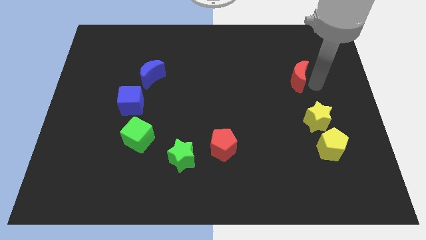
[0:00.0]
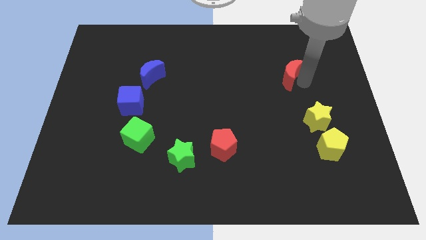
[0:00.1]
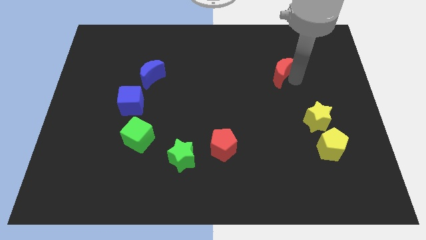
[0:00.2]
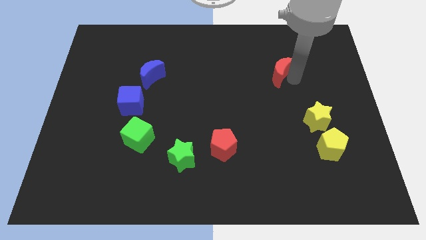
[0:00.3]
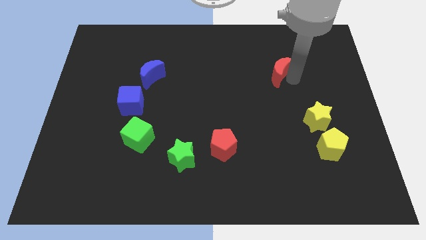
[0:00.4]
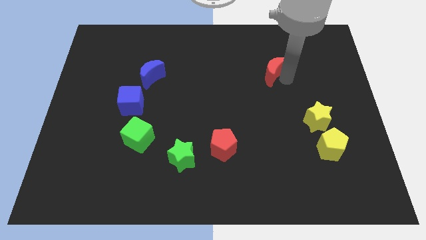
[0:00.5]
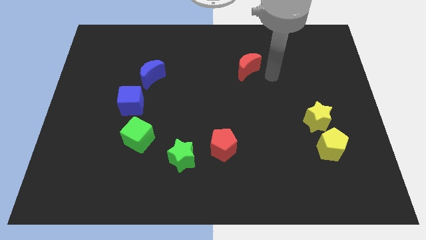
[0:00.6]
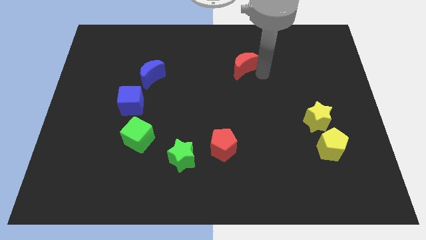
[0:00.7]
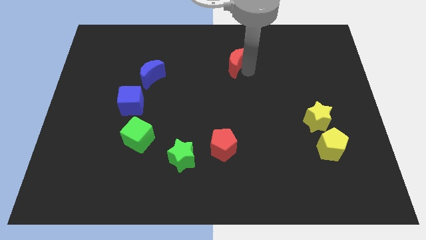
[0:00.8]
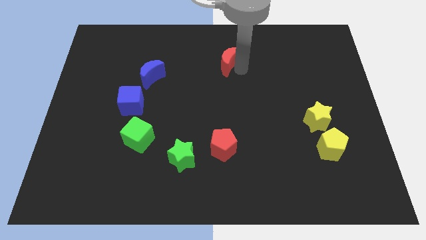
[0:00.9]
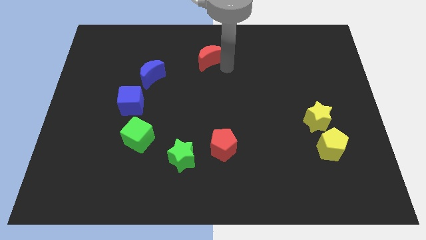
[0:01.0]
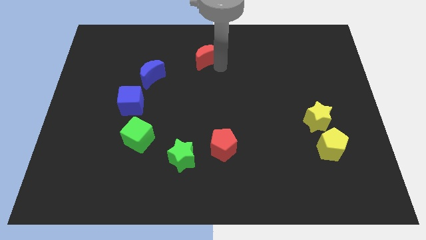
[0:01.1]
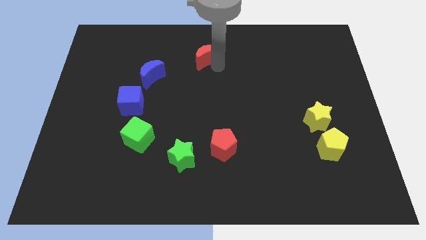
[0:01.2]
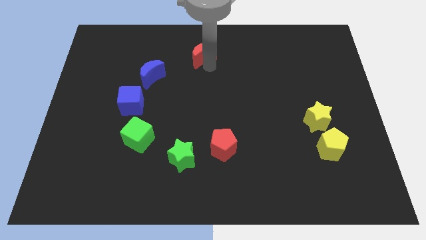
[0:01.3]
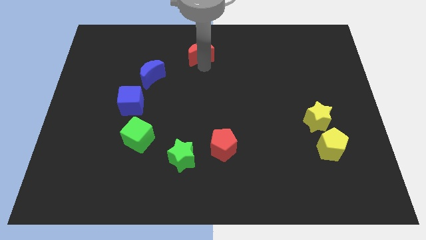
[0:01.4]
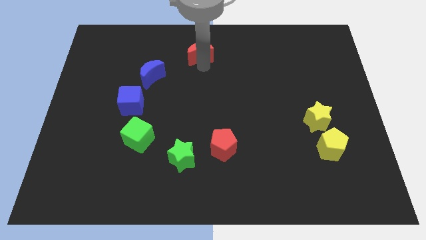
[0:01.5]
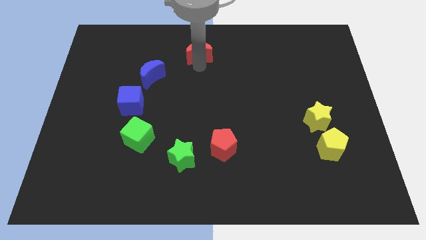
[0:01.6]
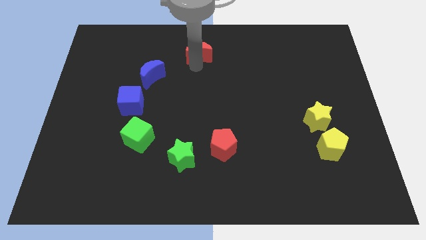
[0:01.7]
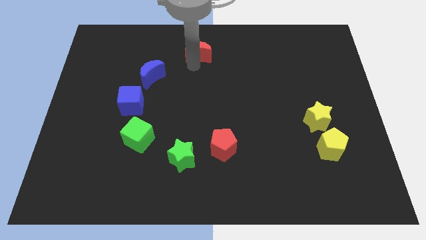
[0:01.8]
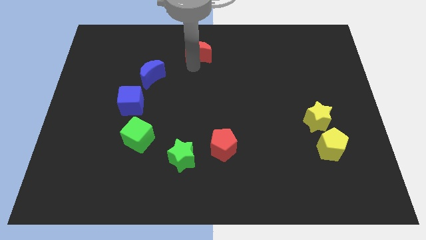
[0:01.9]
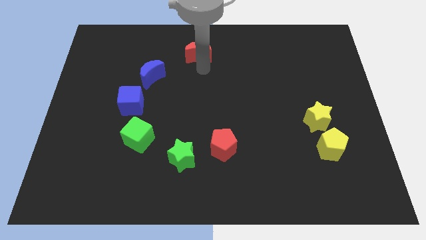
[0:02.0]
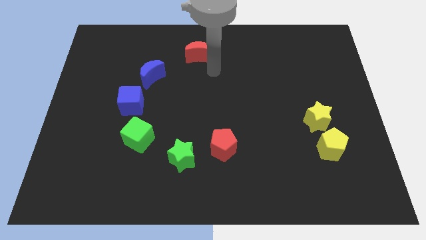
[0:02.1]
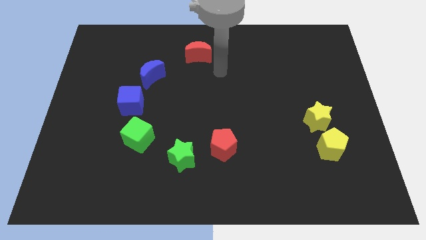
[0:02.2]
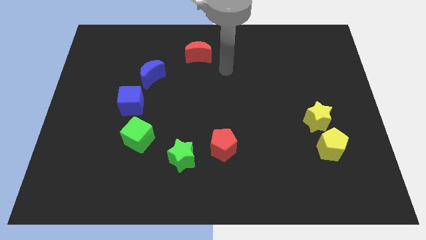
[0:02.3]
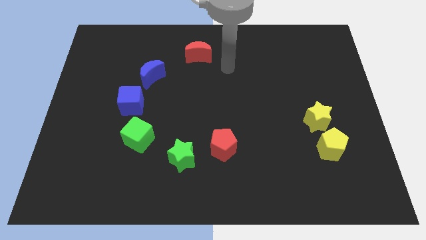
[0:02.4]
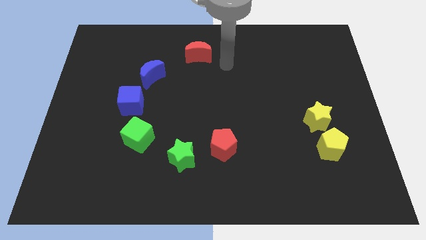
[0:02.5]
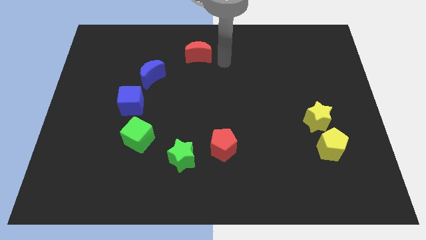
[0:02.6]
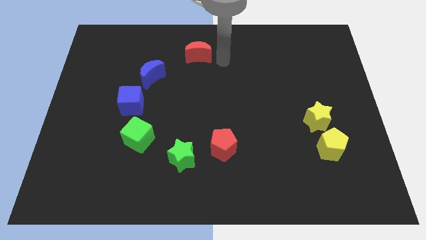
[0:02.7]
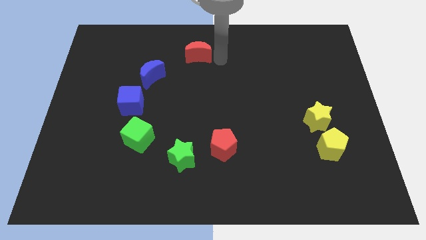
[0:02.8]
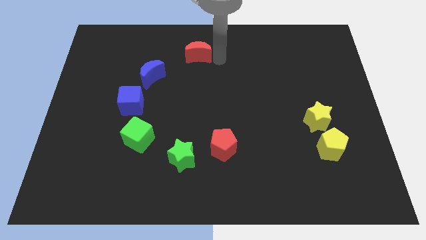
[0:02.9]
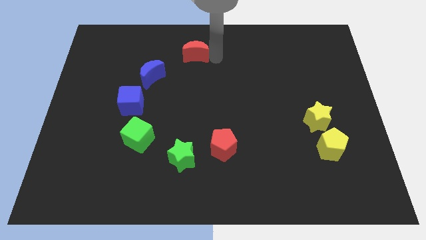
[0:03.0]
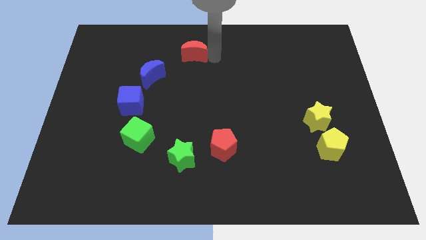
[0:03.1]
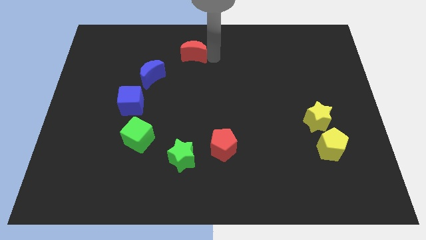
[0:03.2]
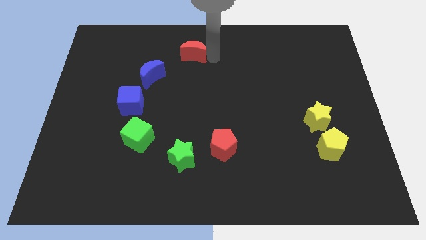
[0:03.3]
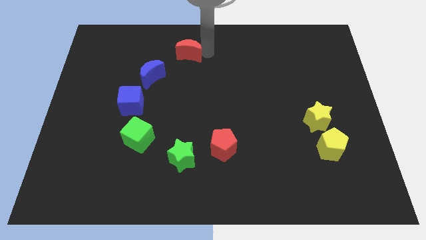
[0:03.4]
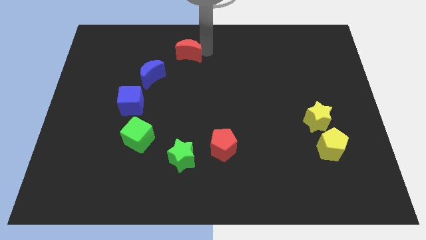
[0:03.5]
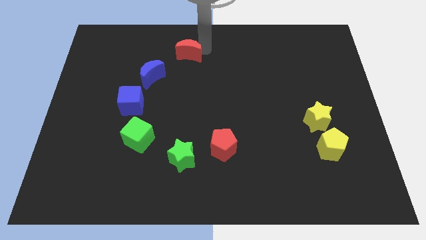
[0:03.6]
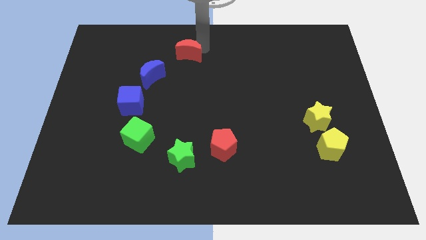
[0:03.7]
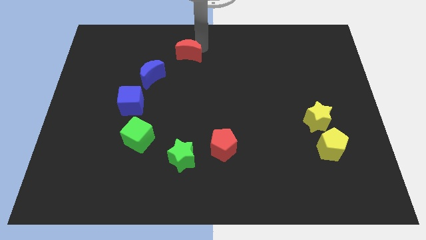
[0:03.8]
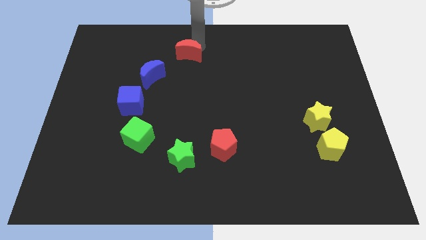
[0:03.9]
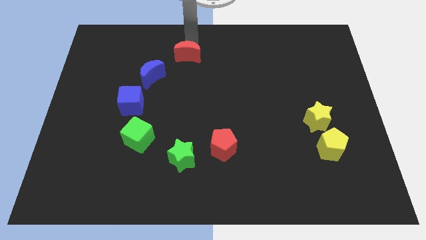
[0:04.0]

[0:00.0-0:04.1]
move red moon to the left vertically above green star

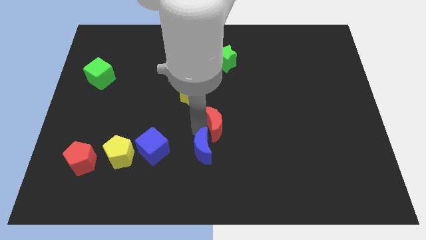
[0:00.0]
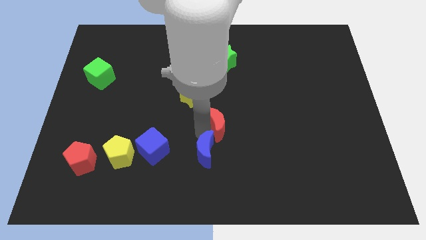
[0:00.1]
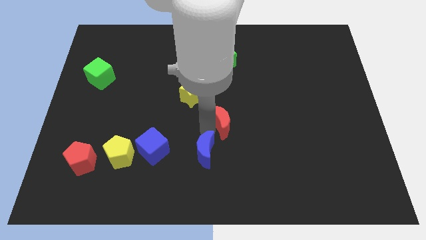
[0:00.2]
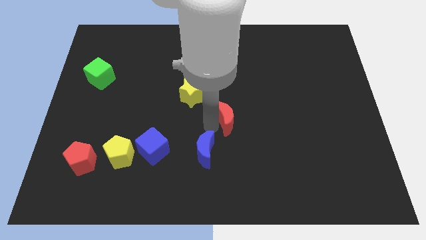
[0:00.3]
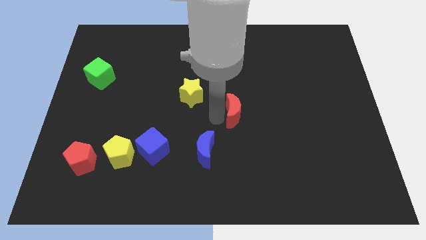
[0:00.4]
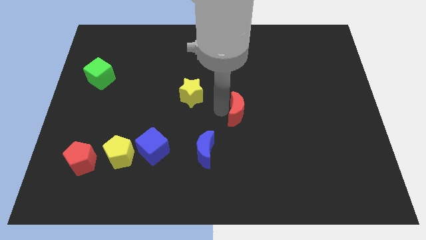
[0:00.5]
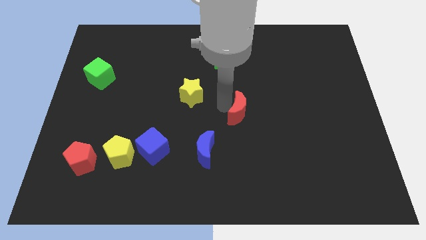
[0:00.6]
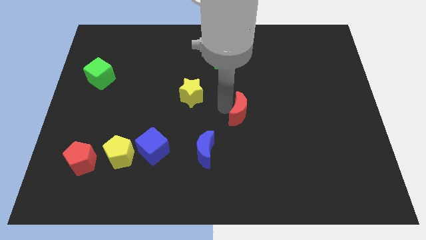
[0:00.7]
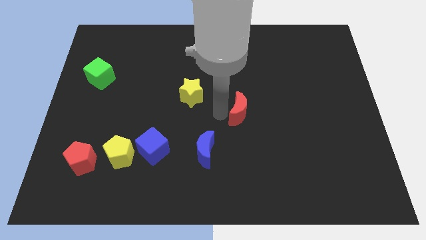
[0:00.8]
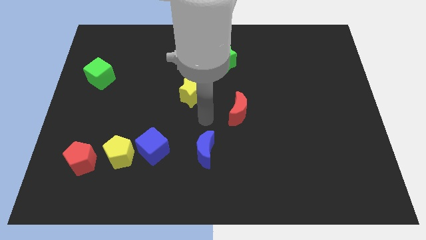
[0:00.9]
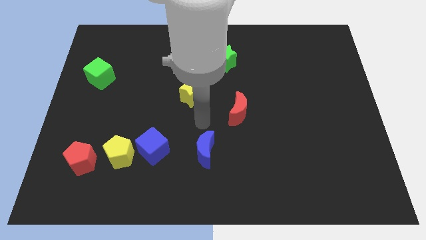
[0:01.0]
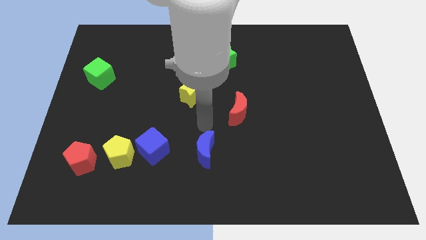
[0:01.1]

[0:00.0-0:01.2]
move the red crescent to the center of the board

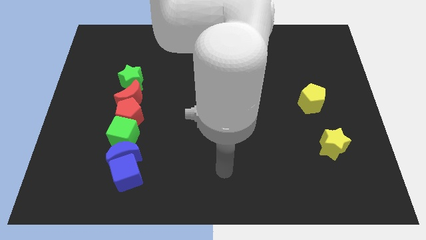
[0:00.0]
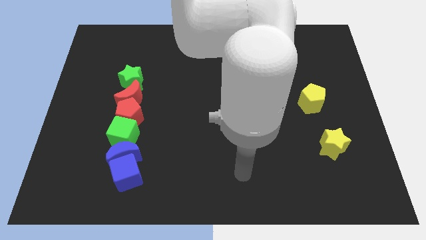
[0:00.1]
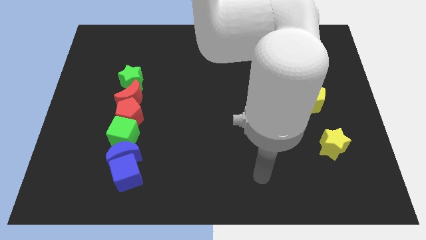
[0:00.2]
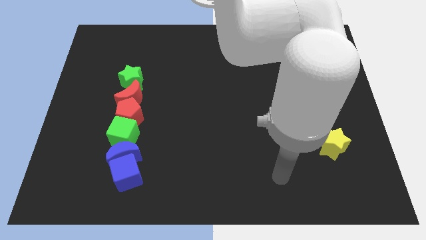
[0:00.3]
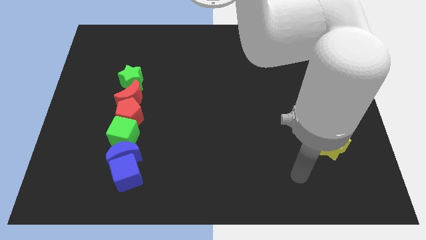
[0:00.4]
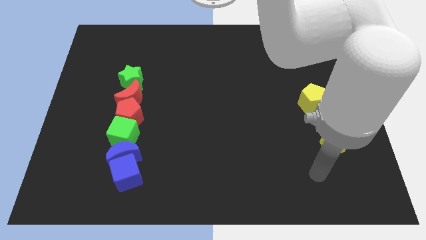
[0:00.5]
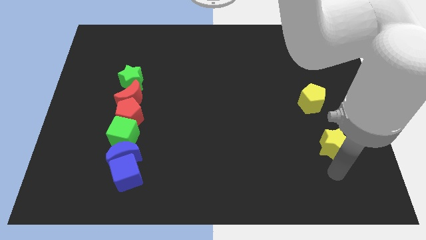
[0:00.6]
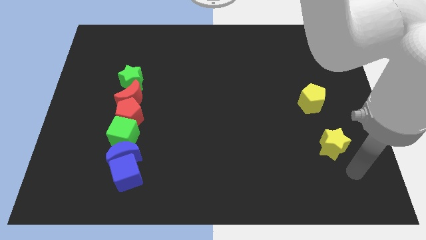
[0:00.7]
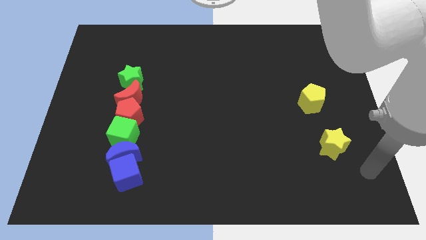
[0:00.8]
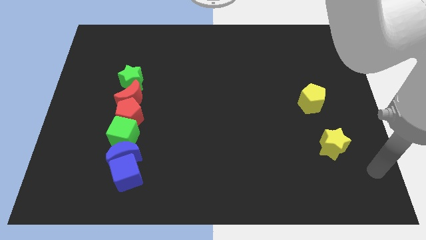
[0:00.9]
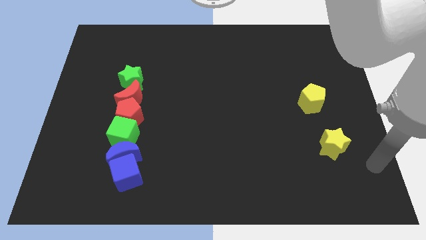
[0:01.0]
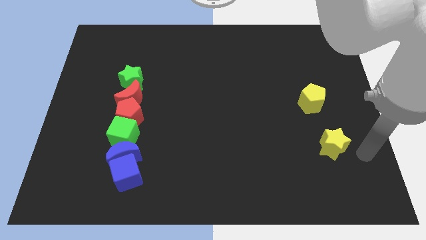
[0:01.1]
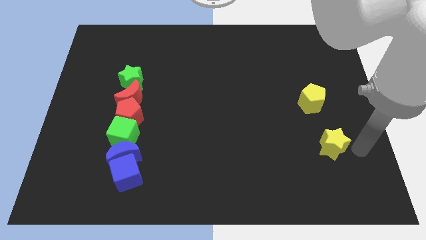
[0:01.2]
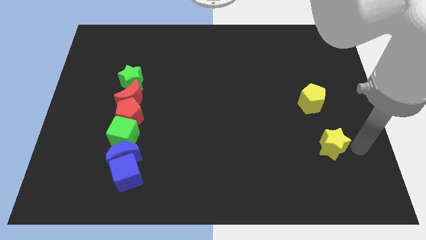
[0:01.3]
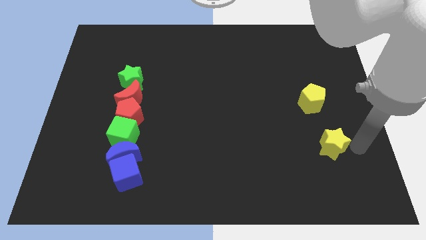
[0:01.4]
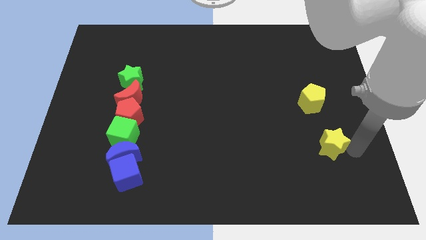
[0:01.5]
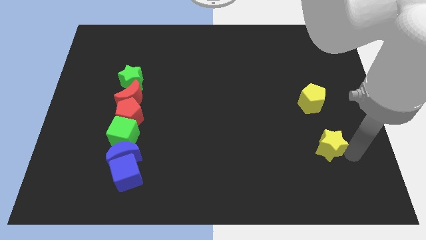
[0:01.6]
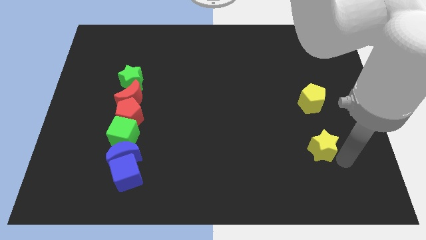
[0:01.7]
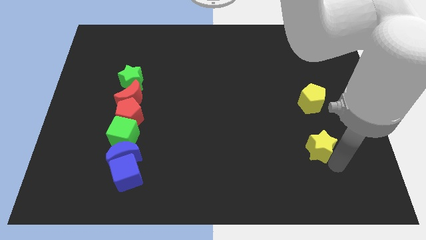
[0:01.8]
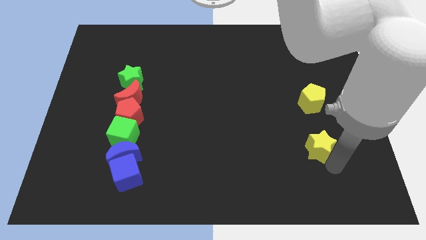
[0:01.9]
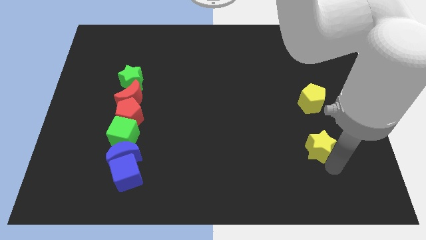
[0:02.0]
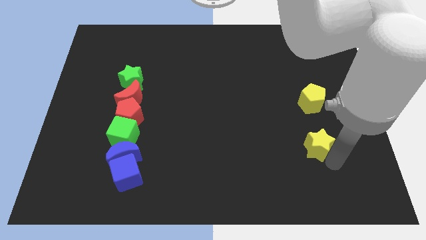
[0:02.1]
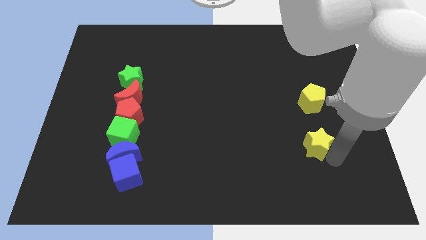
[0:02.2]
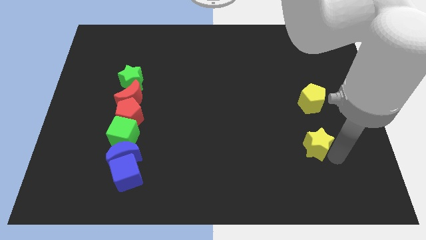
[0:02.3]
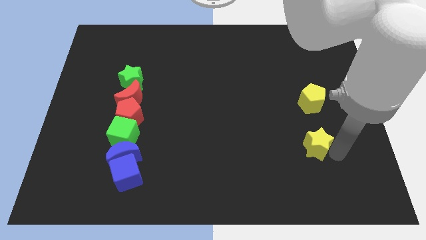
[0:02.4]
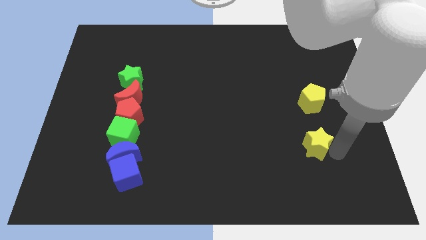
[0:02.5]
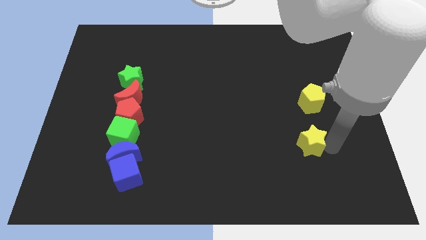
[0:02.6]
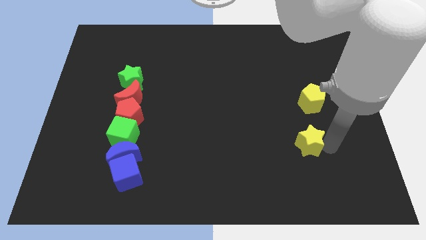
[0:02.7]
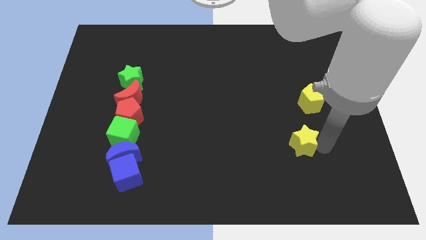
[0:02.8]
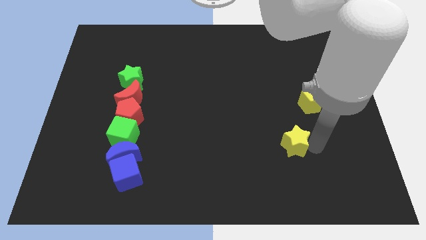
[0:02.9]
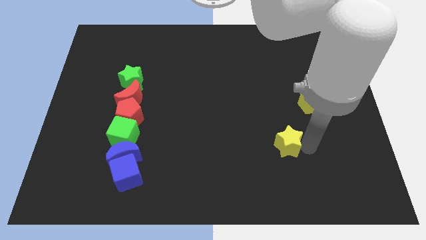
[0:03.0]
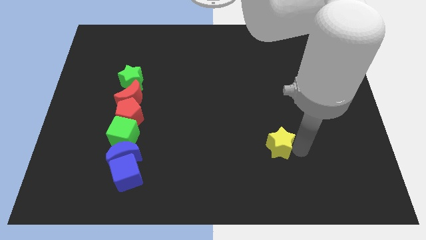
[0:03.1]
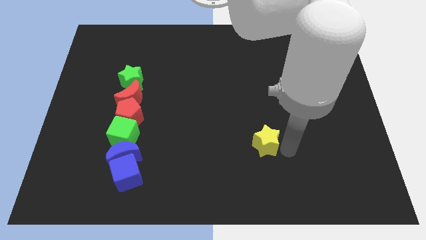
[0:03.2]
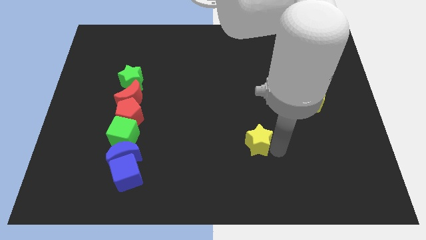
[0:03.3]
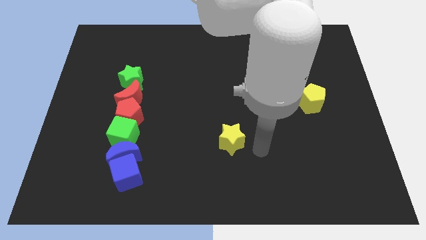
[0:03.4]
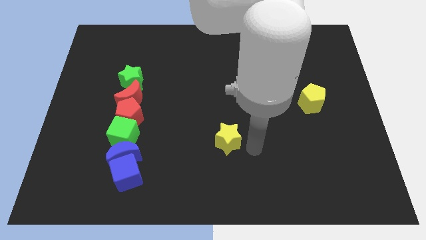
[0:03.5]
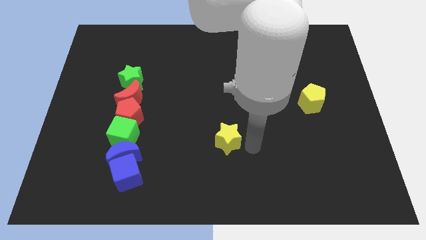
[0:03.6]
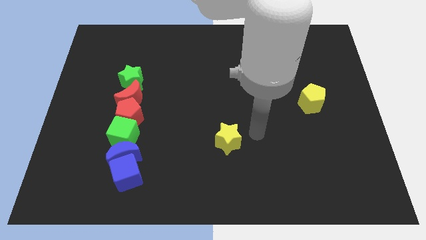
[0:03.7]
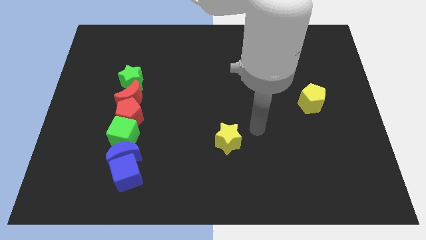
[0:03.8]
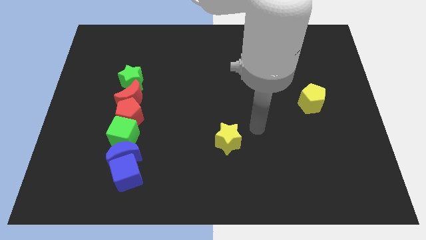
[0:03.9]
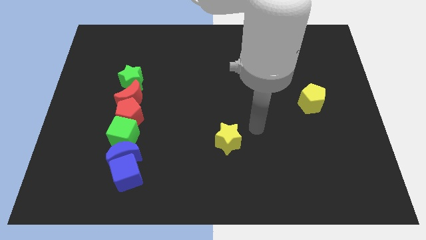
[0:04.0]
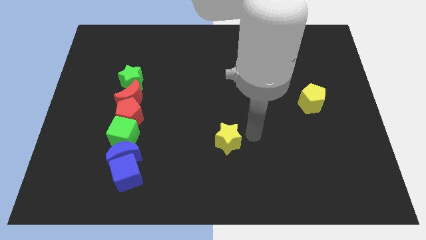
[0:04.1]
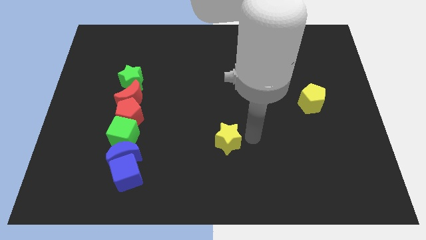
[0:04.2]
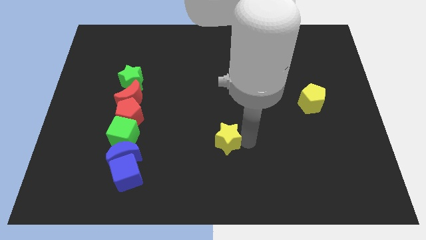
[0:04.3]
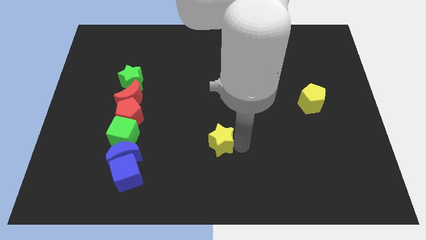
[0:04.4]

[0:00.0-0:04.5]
move the yellow star to the center
